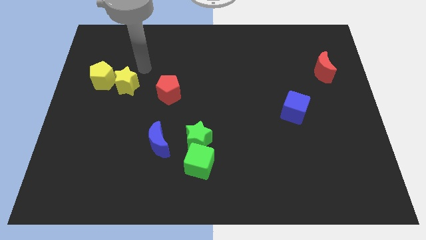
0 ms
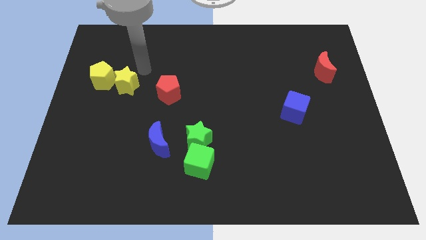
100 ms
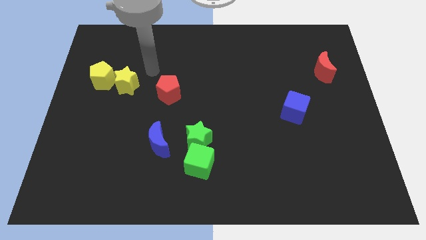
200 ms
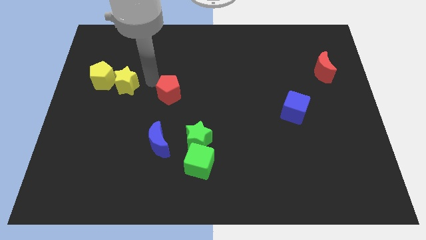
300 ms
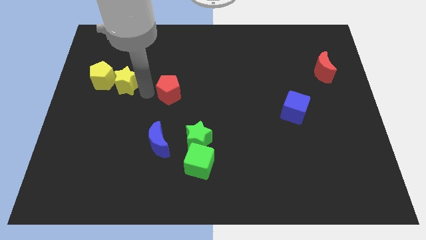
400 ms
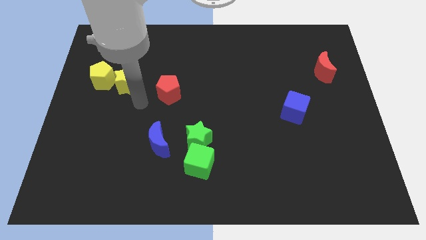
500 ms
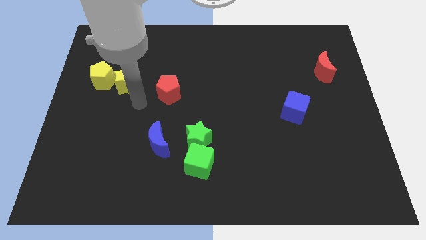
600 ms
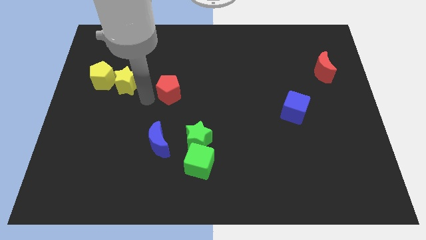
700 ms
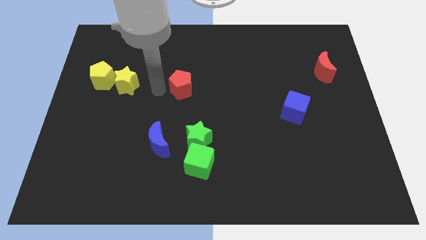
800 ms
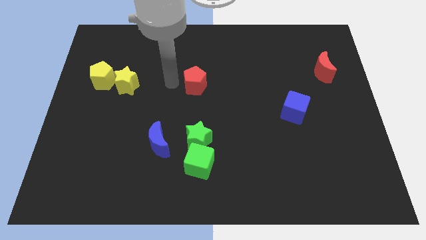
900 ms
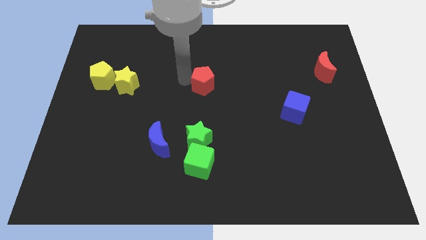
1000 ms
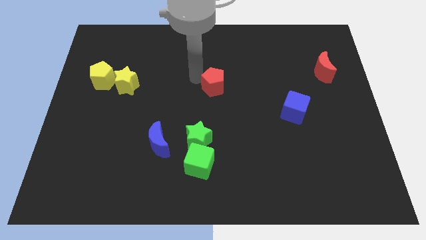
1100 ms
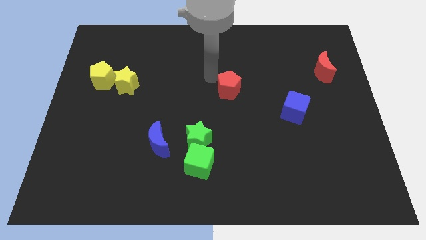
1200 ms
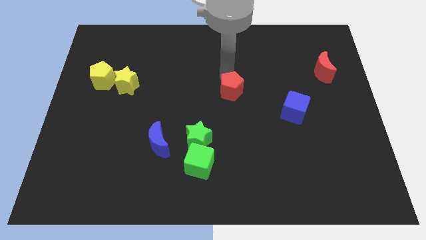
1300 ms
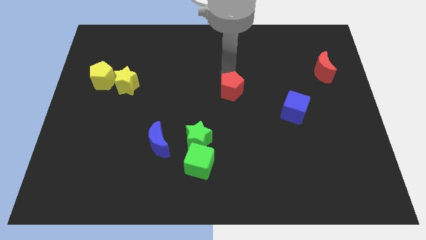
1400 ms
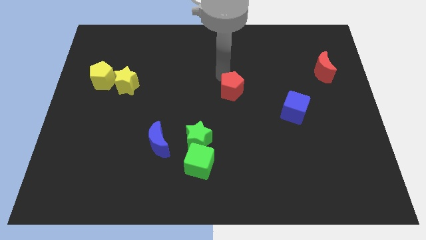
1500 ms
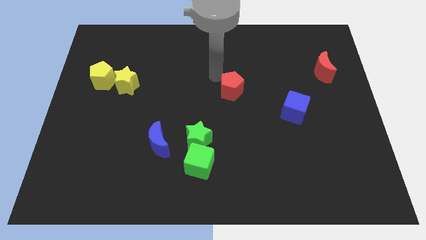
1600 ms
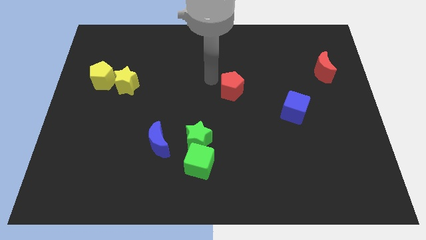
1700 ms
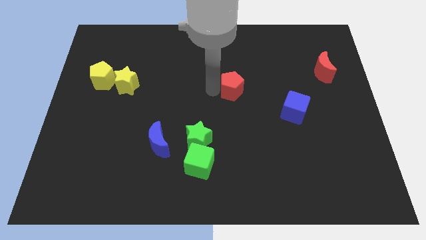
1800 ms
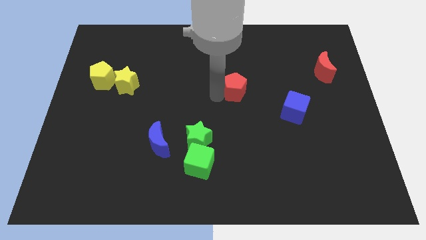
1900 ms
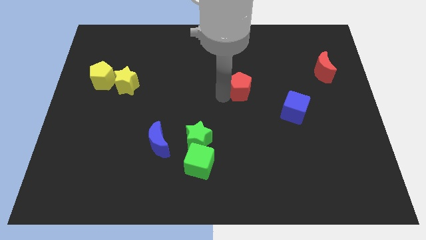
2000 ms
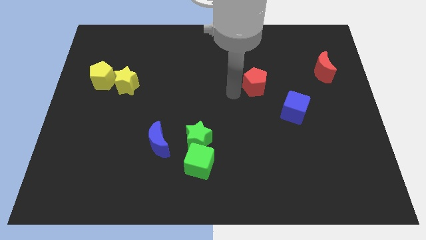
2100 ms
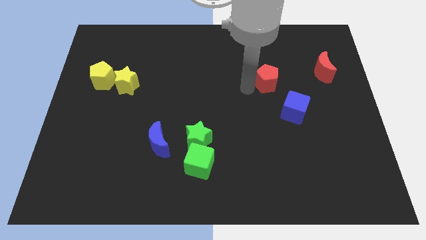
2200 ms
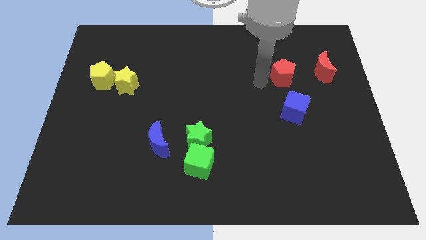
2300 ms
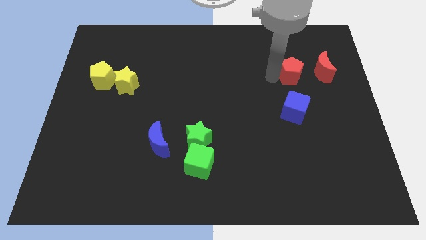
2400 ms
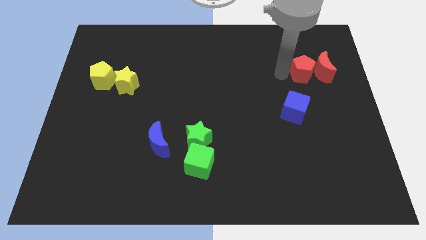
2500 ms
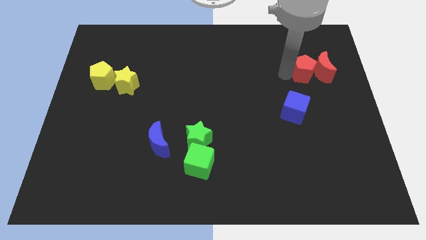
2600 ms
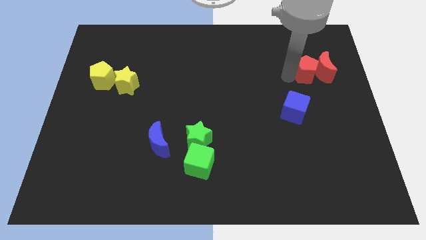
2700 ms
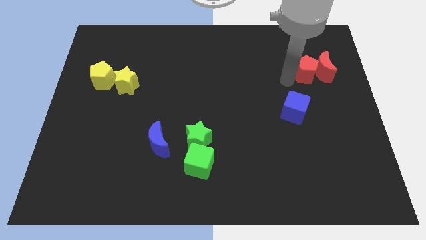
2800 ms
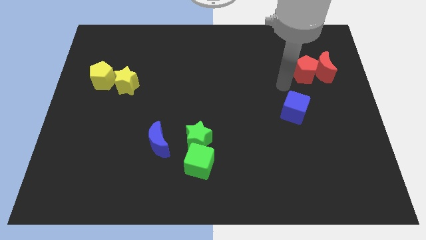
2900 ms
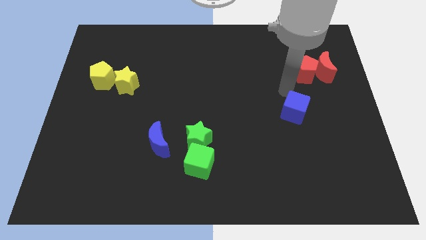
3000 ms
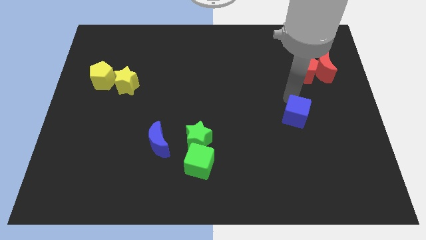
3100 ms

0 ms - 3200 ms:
slide red pentagon into red moon

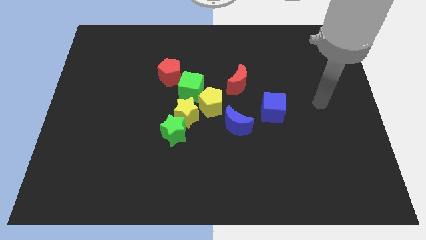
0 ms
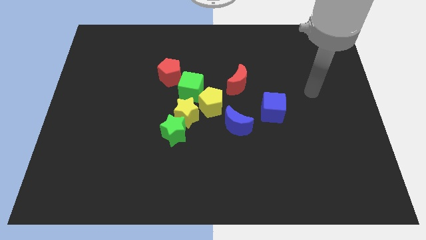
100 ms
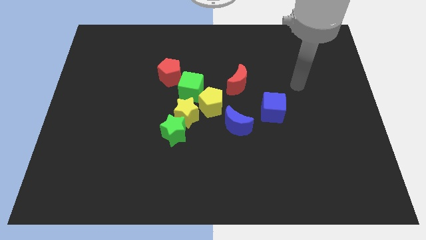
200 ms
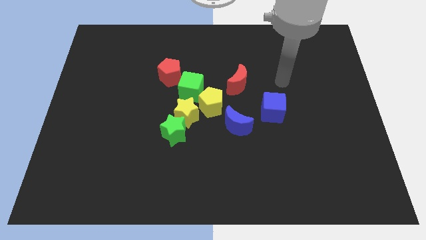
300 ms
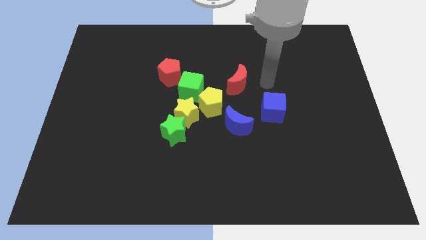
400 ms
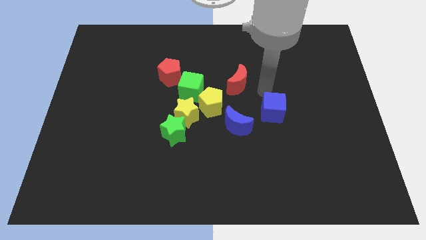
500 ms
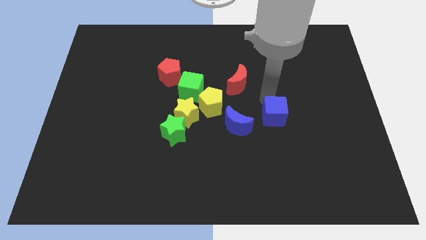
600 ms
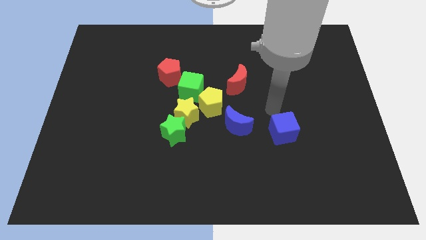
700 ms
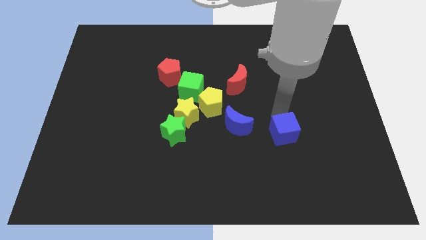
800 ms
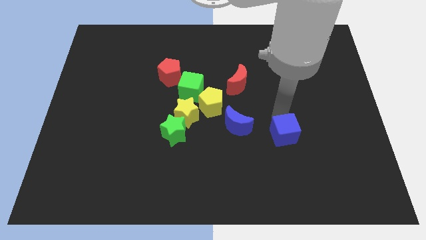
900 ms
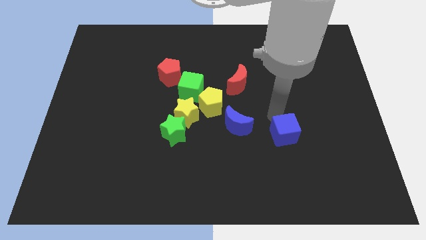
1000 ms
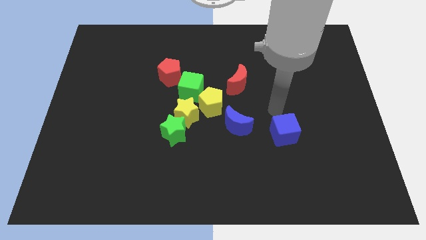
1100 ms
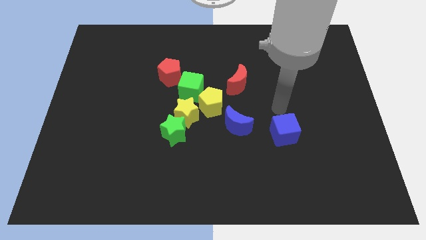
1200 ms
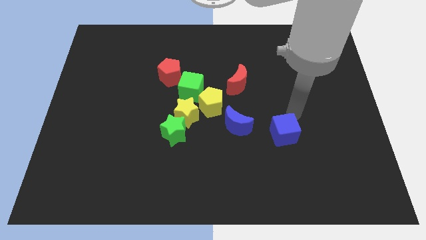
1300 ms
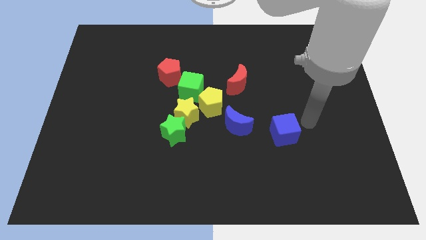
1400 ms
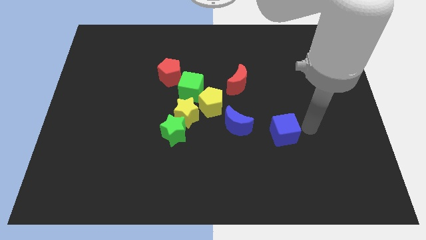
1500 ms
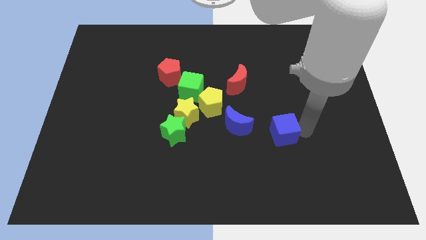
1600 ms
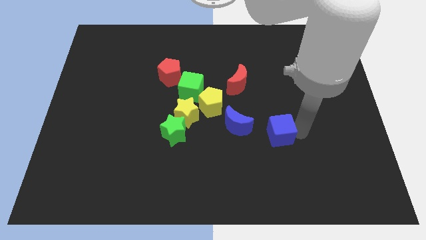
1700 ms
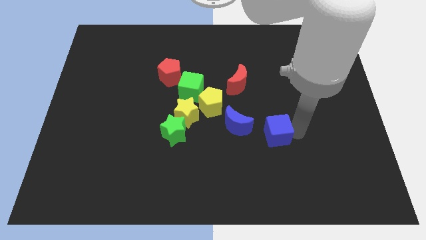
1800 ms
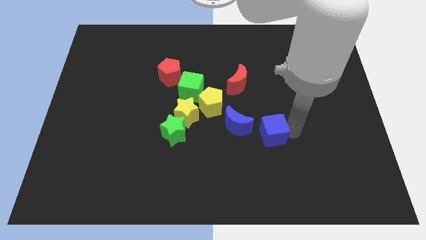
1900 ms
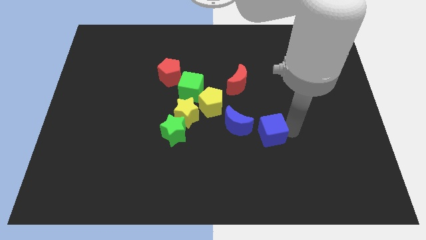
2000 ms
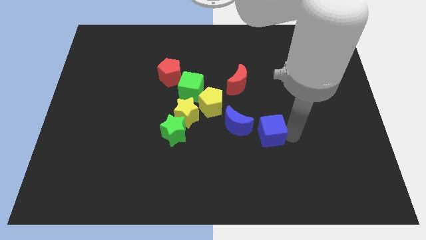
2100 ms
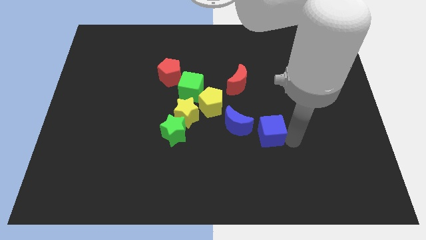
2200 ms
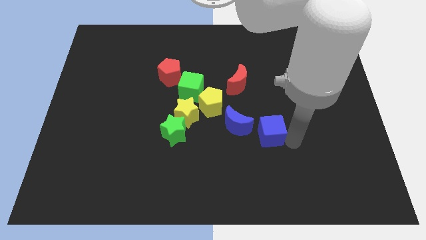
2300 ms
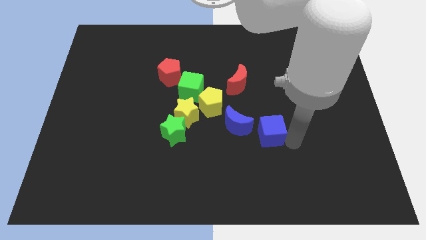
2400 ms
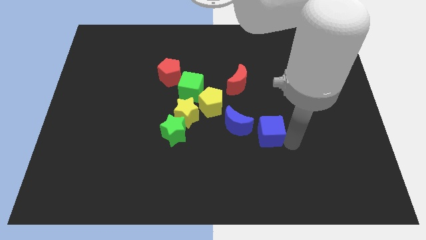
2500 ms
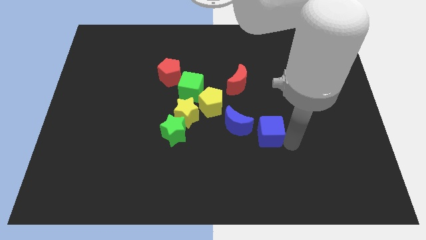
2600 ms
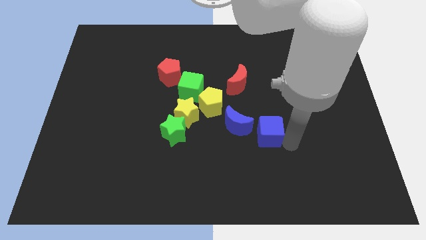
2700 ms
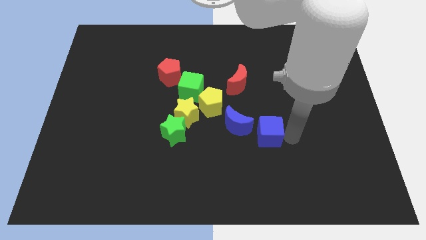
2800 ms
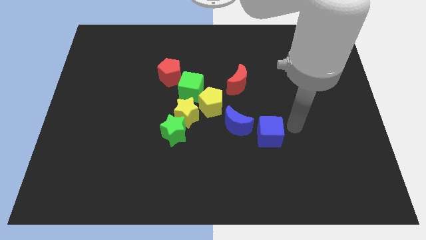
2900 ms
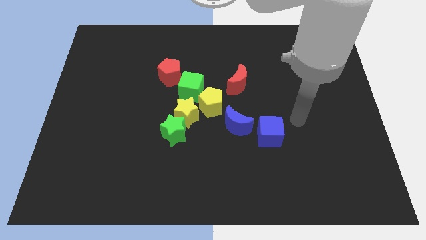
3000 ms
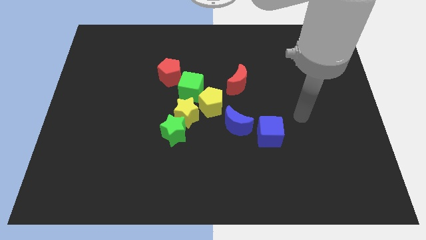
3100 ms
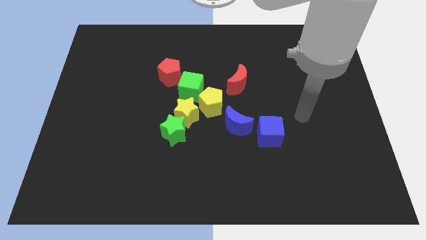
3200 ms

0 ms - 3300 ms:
place blue cube to the bottom right of the blue moon

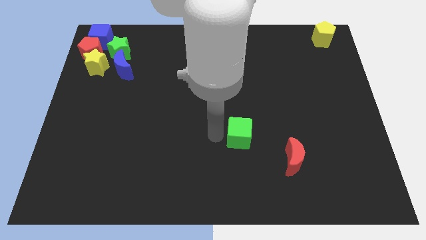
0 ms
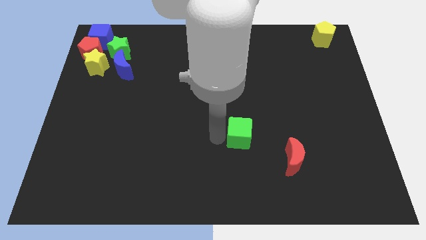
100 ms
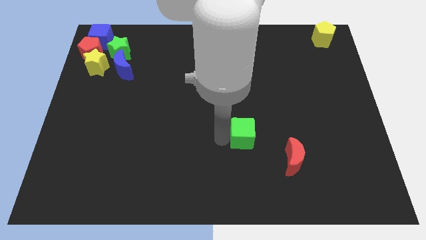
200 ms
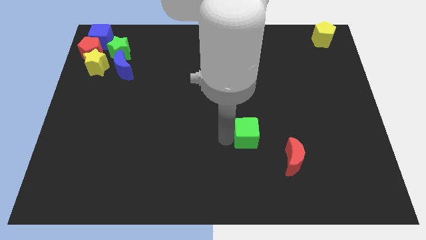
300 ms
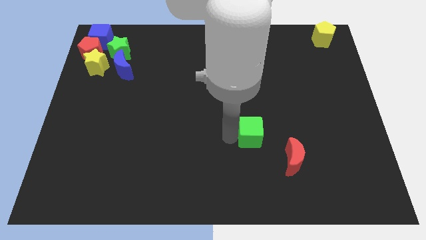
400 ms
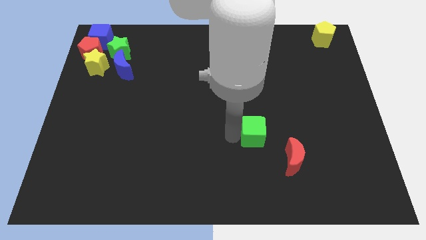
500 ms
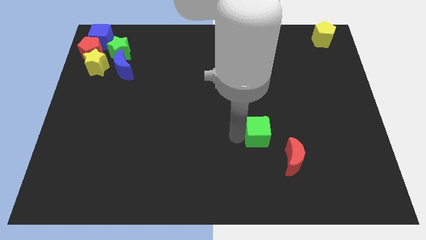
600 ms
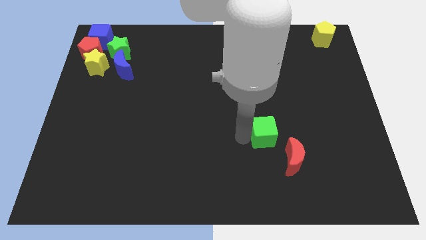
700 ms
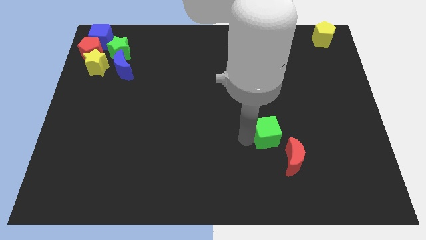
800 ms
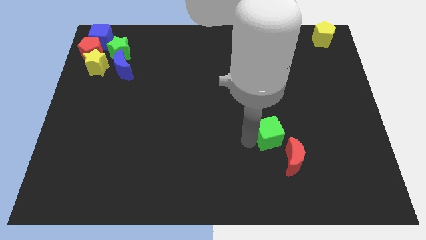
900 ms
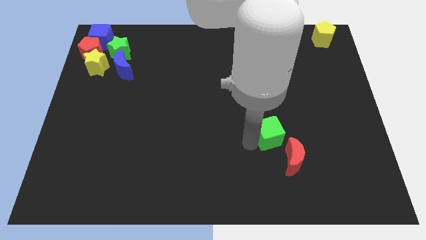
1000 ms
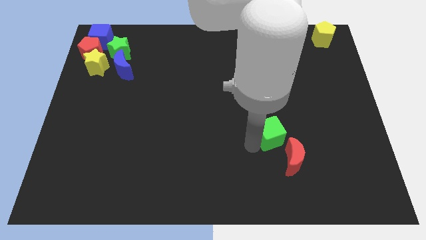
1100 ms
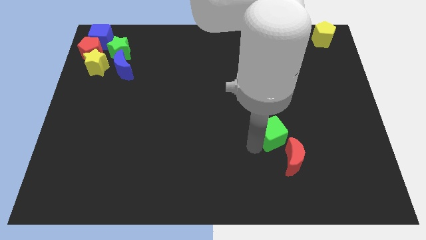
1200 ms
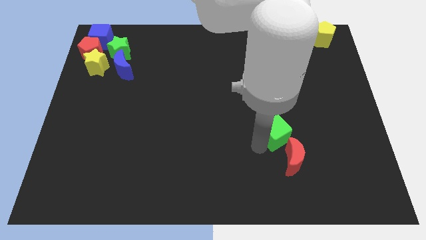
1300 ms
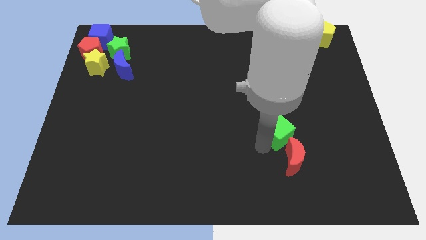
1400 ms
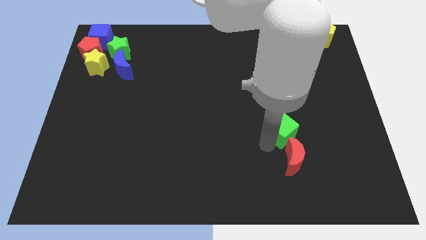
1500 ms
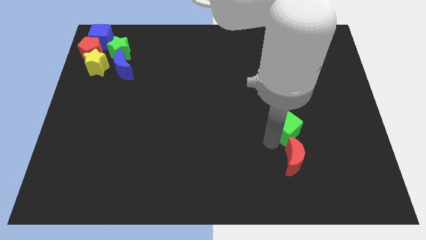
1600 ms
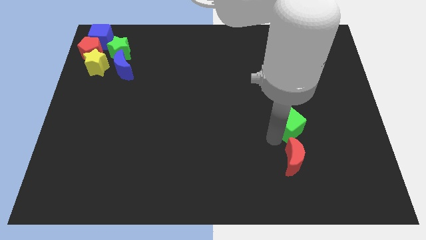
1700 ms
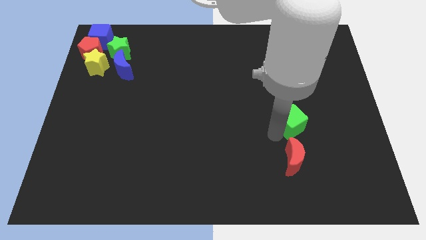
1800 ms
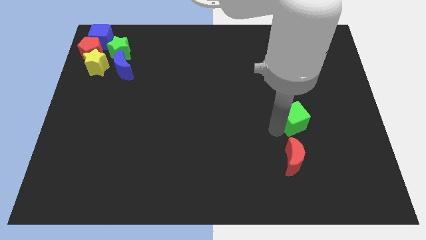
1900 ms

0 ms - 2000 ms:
slide the green cube to the top side of the red crescent

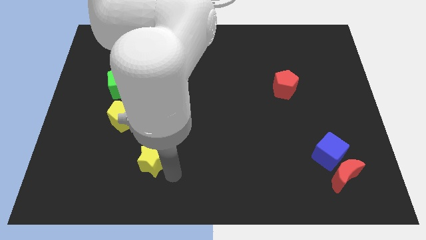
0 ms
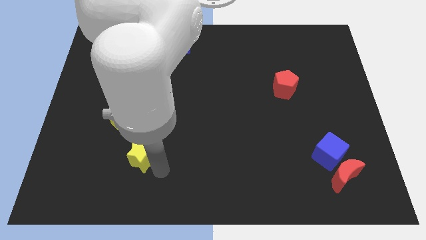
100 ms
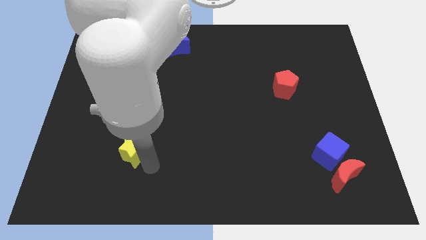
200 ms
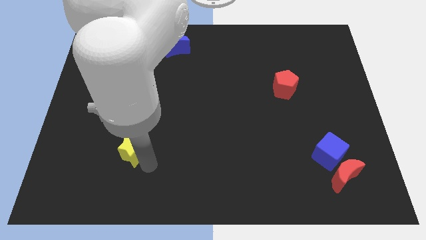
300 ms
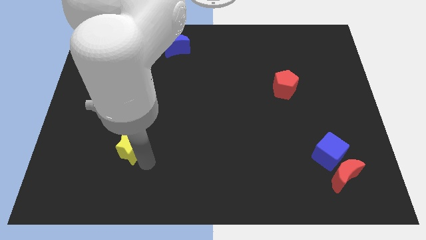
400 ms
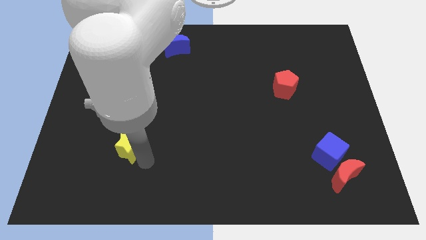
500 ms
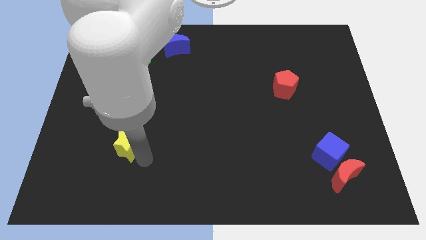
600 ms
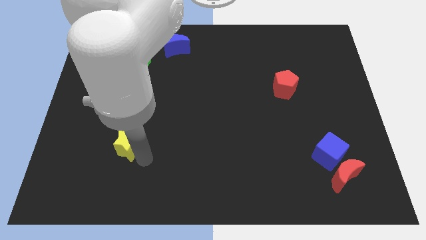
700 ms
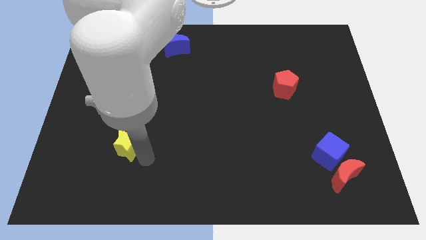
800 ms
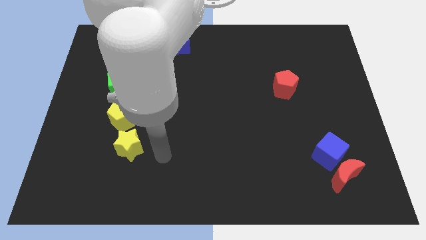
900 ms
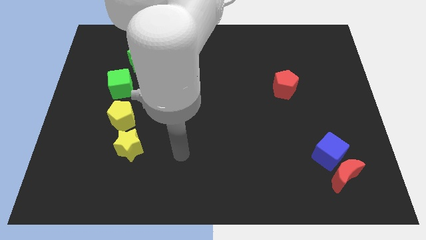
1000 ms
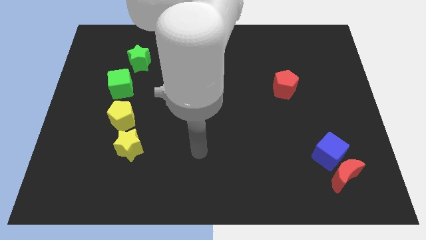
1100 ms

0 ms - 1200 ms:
place the yellow star below the yellow pentagon
